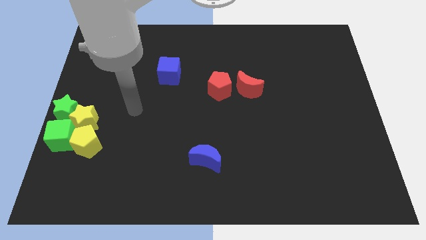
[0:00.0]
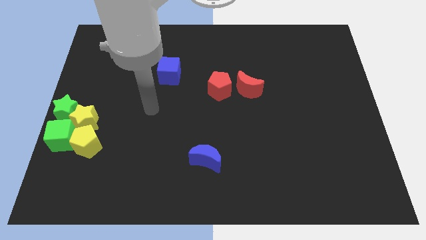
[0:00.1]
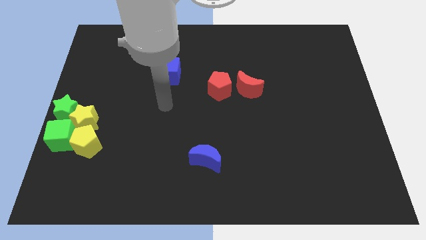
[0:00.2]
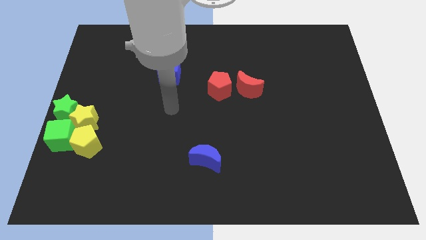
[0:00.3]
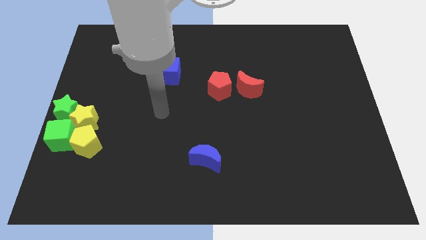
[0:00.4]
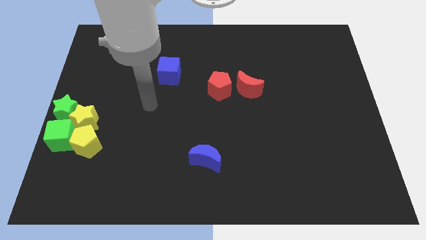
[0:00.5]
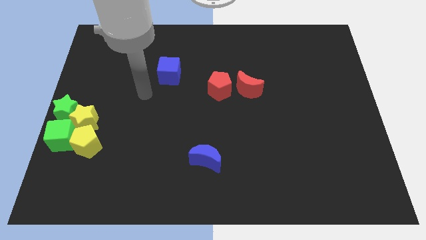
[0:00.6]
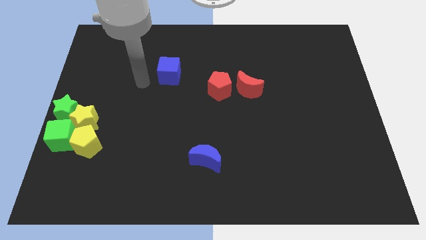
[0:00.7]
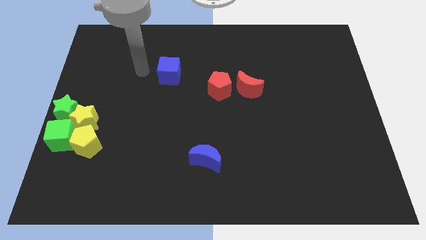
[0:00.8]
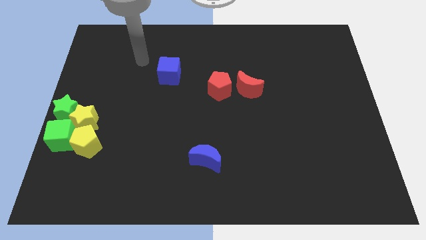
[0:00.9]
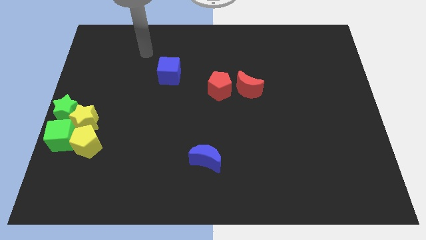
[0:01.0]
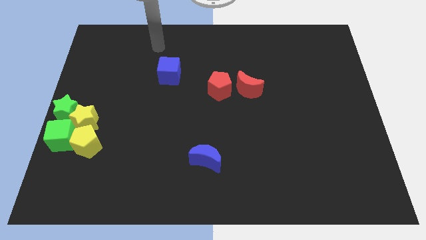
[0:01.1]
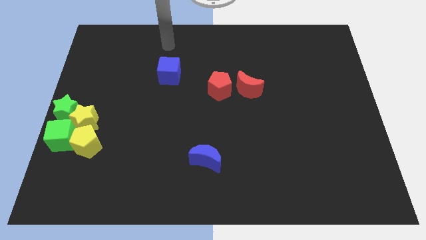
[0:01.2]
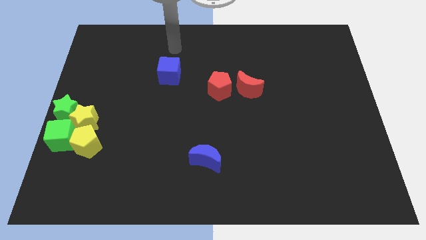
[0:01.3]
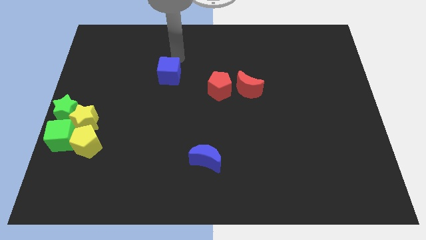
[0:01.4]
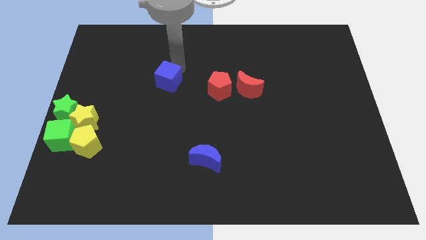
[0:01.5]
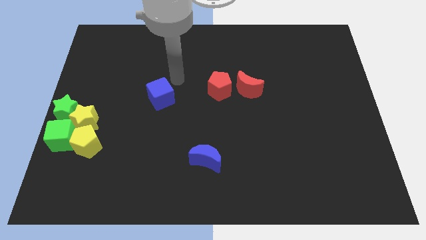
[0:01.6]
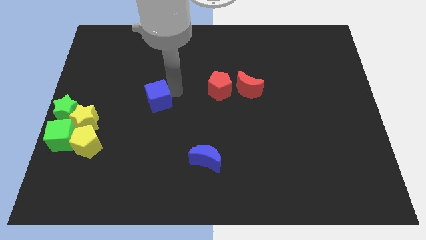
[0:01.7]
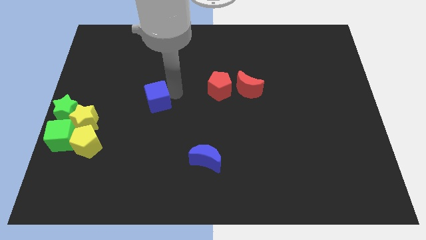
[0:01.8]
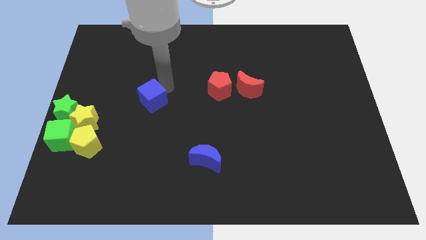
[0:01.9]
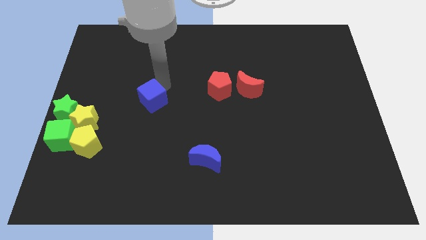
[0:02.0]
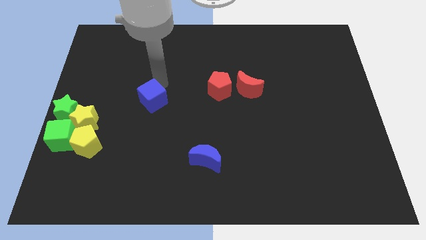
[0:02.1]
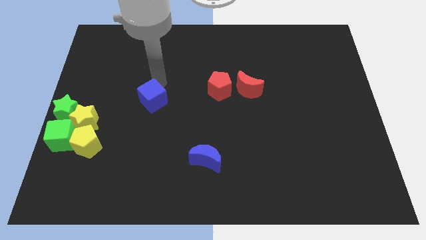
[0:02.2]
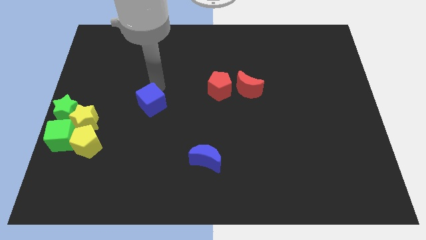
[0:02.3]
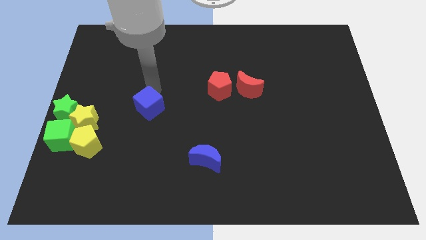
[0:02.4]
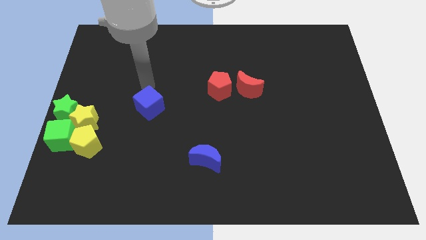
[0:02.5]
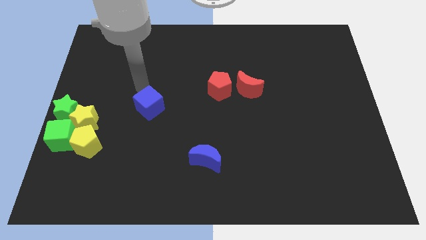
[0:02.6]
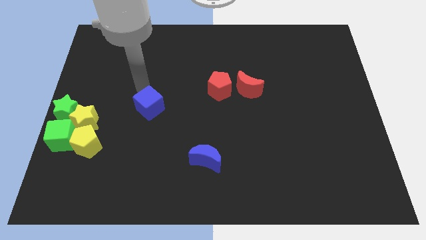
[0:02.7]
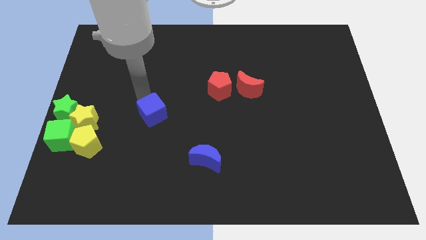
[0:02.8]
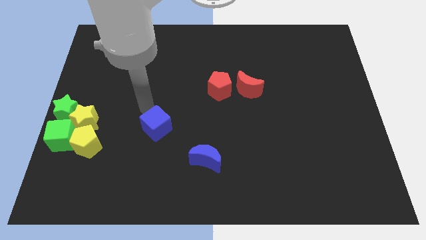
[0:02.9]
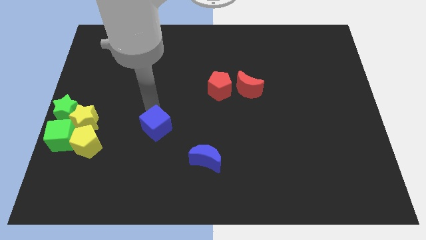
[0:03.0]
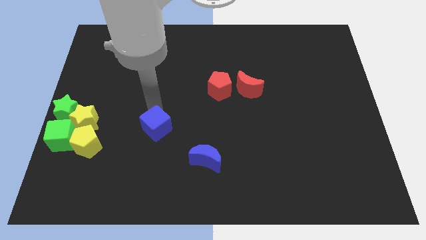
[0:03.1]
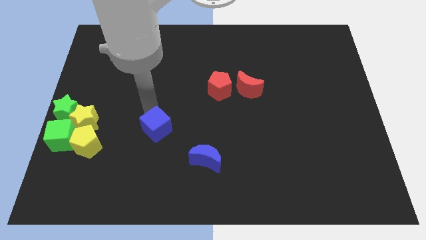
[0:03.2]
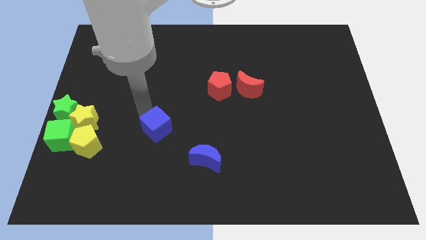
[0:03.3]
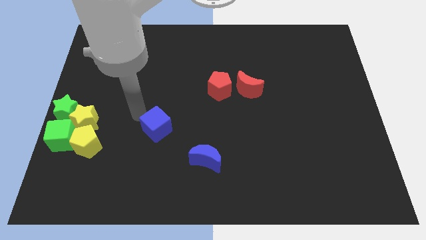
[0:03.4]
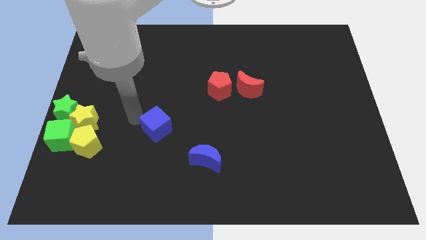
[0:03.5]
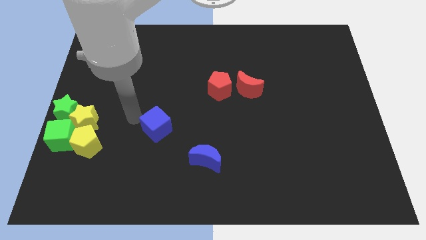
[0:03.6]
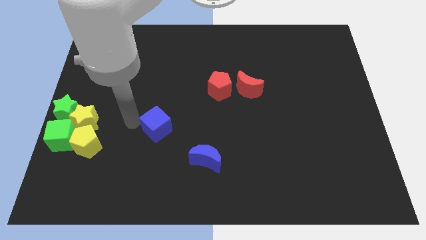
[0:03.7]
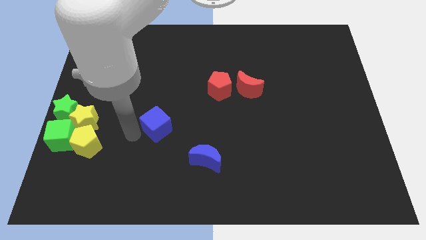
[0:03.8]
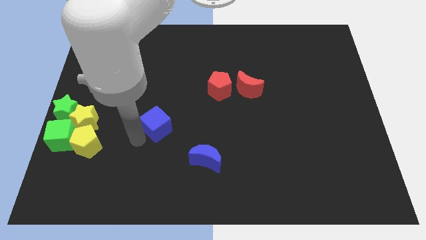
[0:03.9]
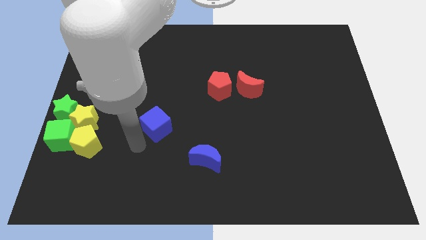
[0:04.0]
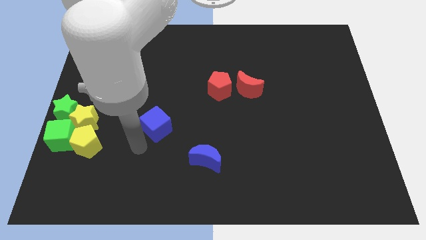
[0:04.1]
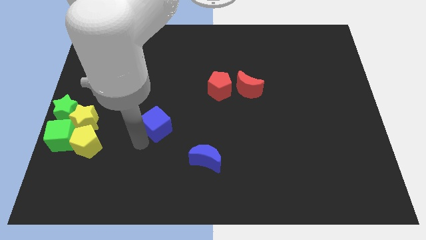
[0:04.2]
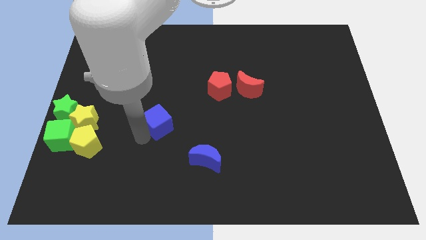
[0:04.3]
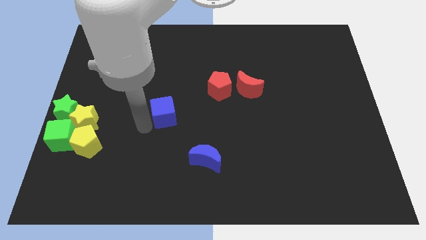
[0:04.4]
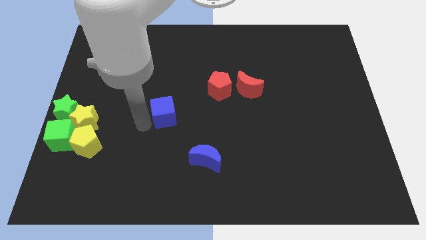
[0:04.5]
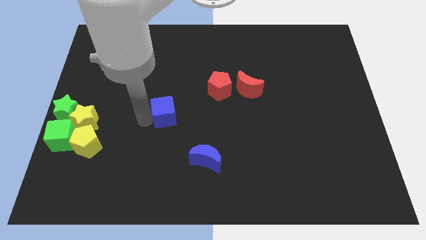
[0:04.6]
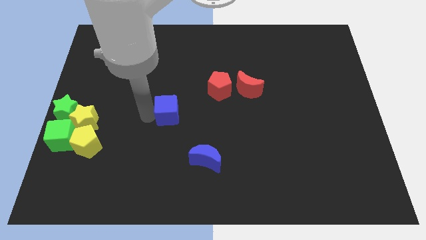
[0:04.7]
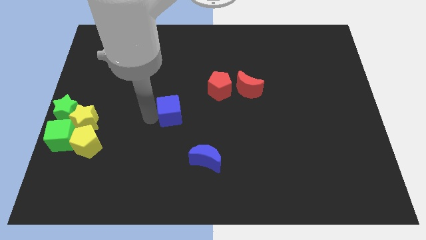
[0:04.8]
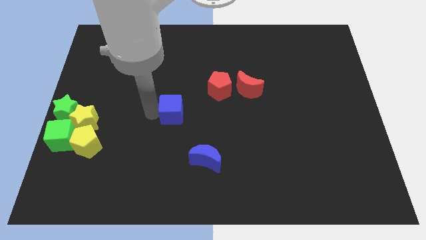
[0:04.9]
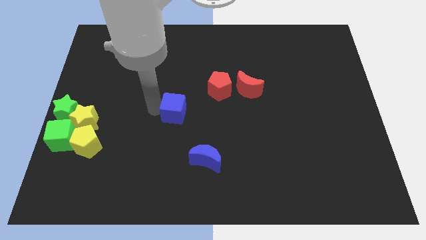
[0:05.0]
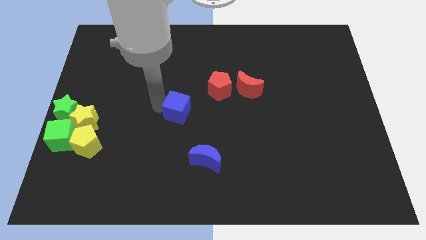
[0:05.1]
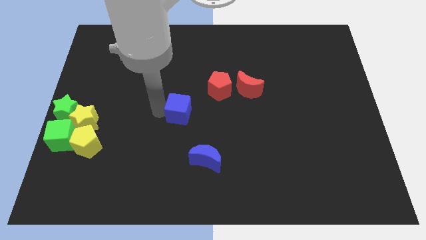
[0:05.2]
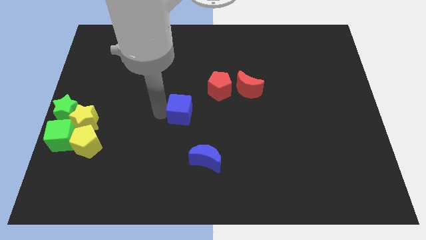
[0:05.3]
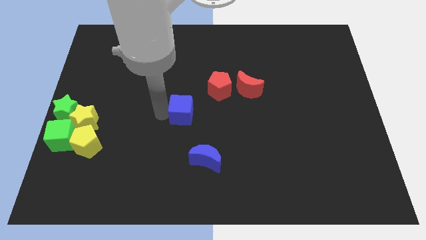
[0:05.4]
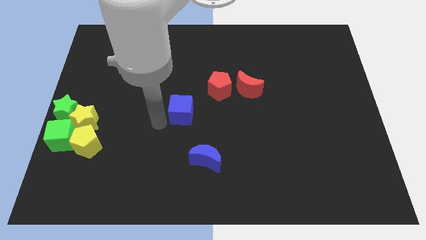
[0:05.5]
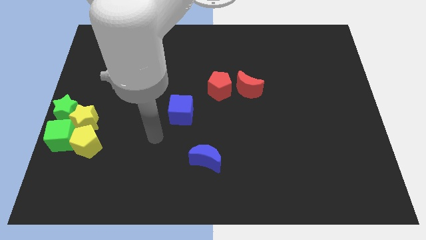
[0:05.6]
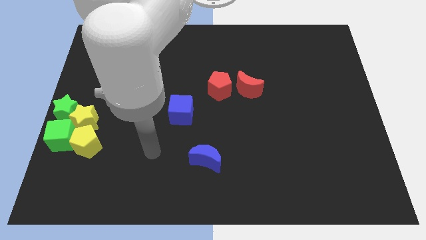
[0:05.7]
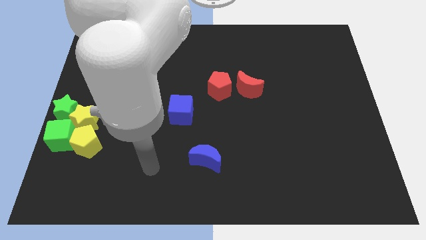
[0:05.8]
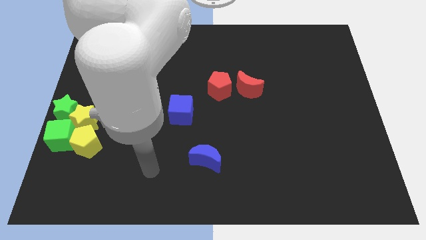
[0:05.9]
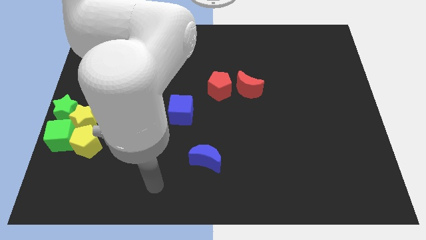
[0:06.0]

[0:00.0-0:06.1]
push the blue cube diagonally bottom left to the red pentagon

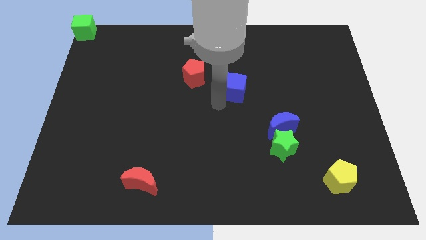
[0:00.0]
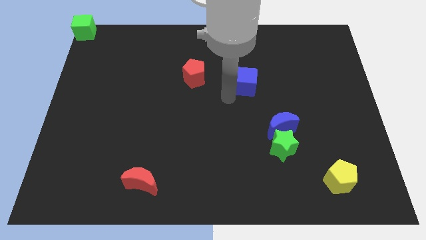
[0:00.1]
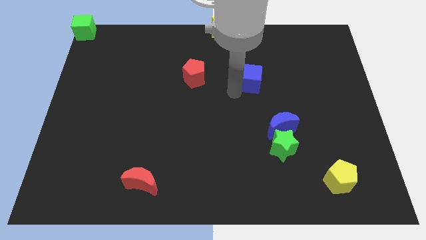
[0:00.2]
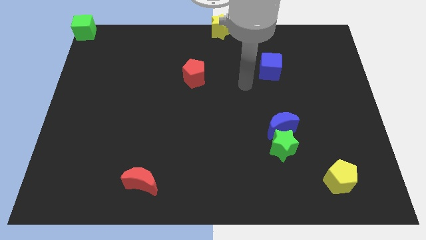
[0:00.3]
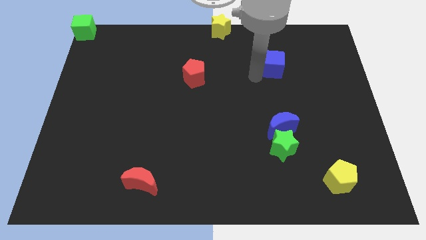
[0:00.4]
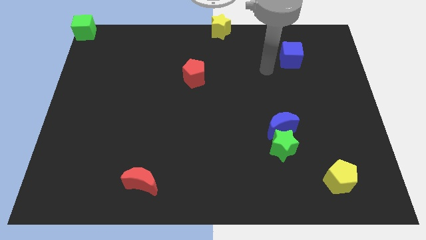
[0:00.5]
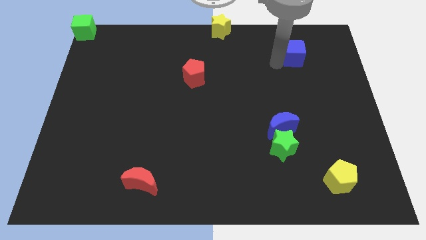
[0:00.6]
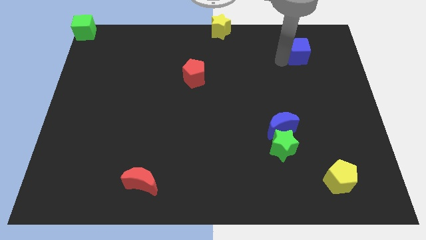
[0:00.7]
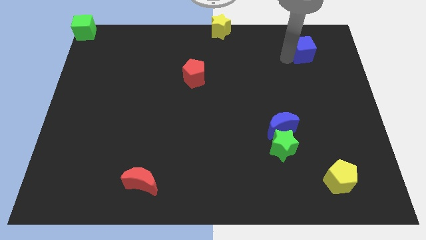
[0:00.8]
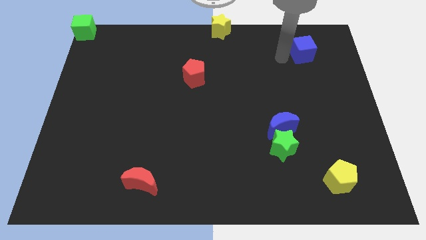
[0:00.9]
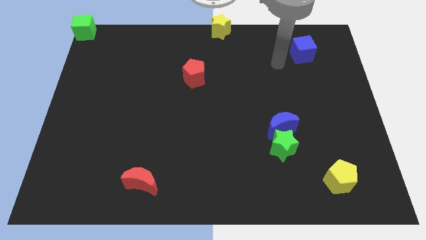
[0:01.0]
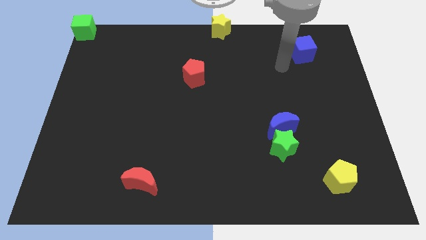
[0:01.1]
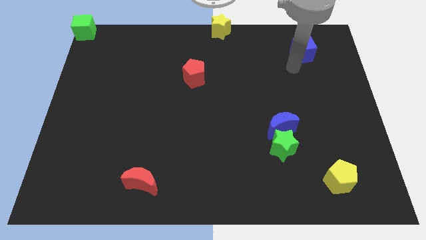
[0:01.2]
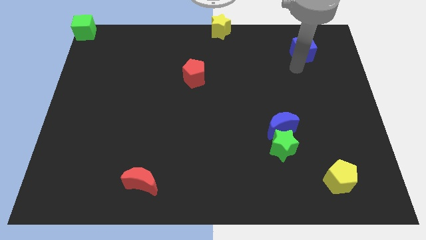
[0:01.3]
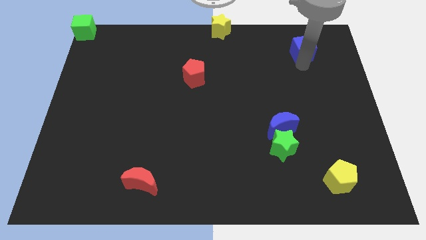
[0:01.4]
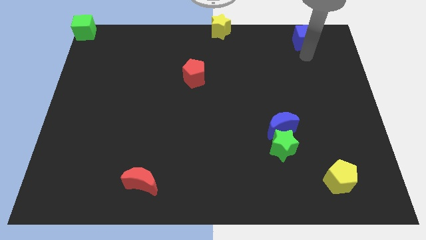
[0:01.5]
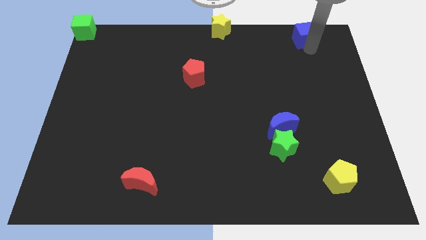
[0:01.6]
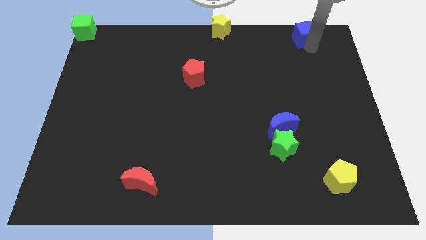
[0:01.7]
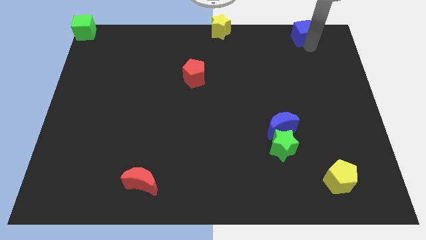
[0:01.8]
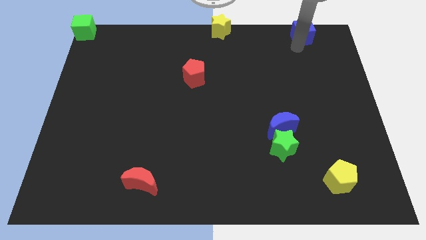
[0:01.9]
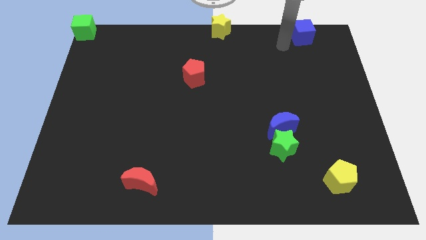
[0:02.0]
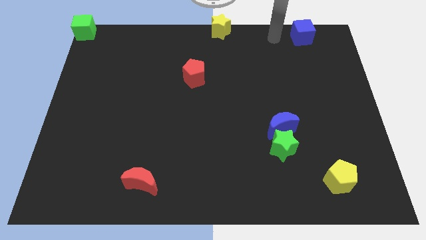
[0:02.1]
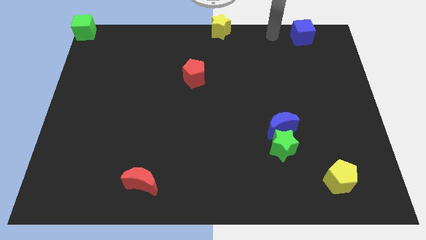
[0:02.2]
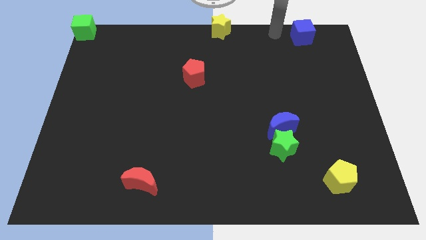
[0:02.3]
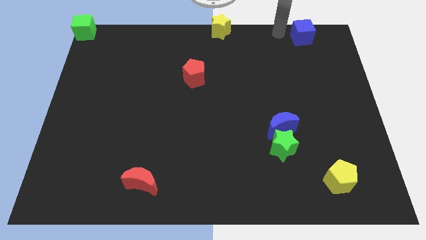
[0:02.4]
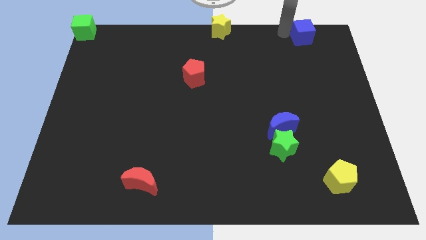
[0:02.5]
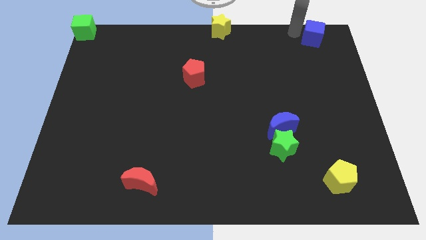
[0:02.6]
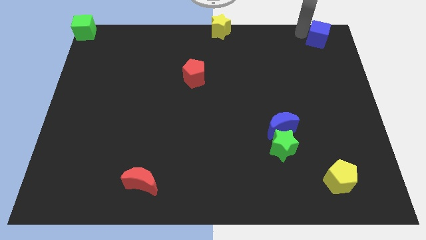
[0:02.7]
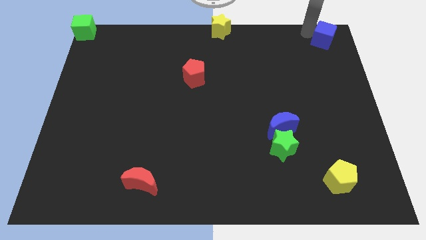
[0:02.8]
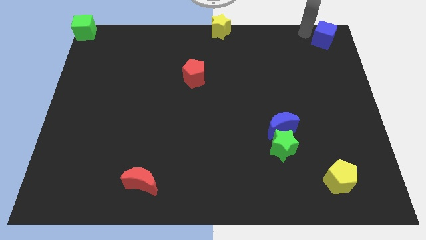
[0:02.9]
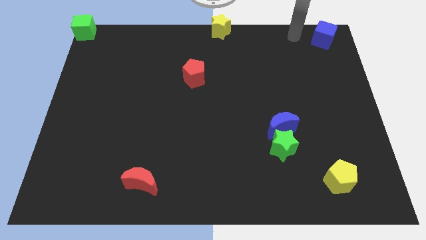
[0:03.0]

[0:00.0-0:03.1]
move the blue cube to the top right corner
